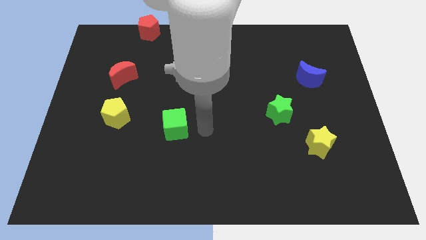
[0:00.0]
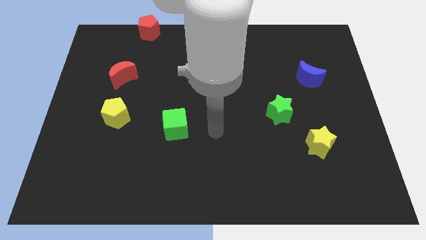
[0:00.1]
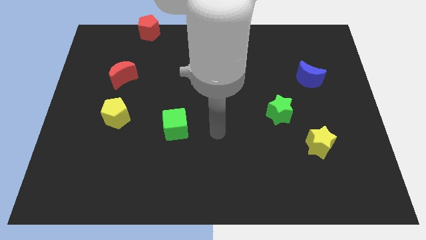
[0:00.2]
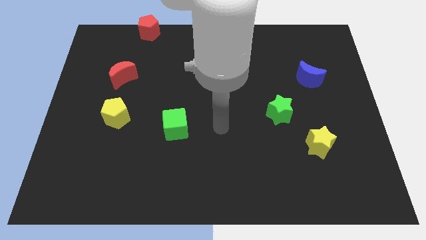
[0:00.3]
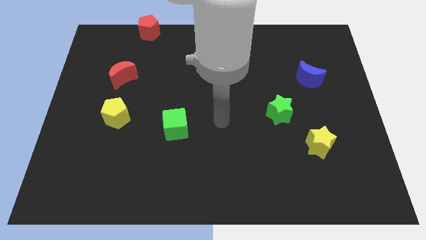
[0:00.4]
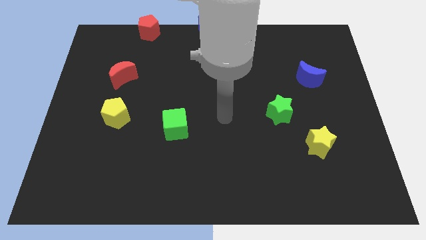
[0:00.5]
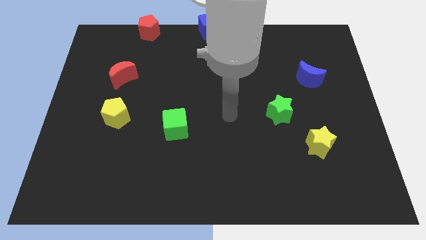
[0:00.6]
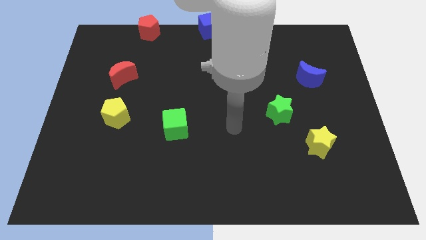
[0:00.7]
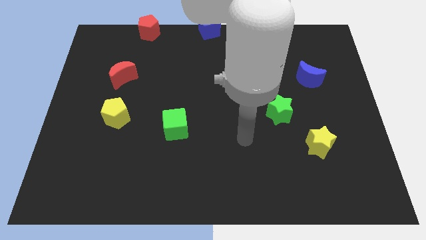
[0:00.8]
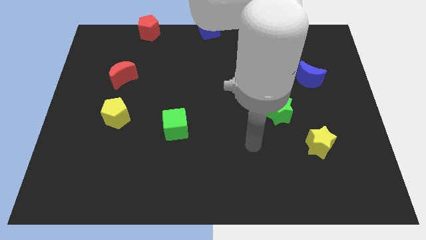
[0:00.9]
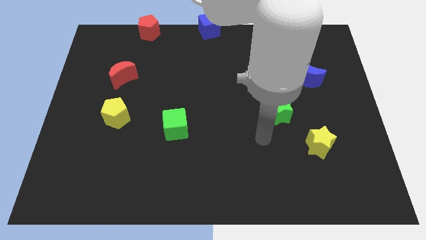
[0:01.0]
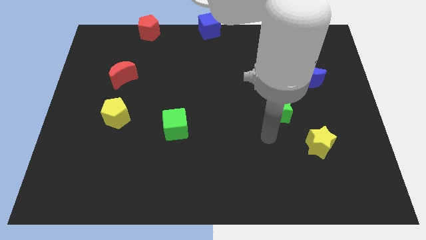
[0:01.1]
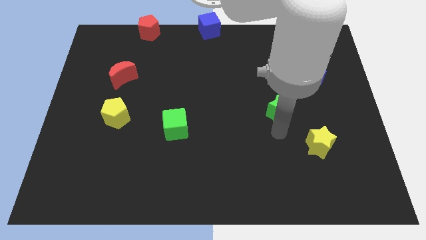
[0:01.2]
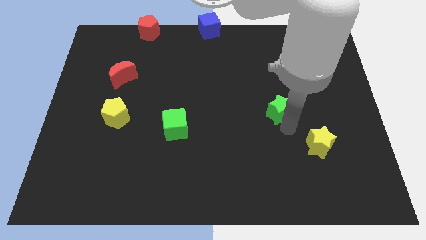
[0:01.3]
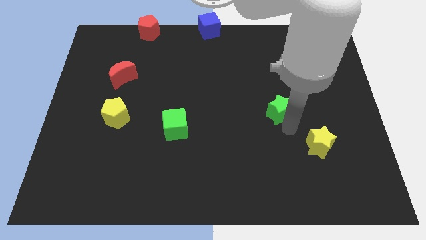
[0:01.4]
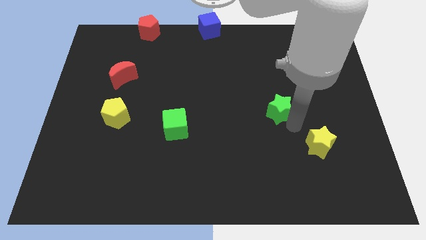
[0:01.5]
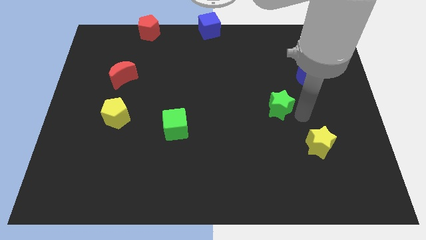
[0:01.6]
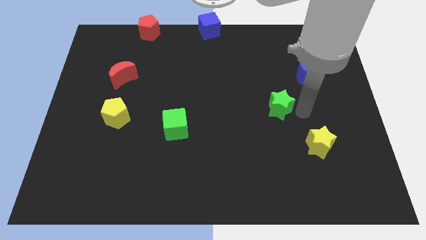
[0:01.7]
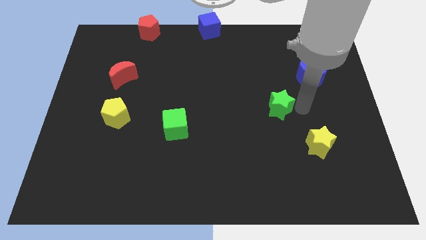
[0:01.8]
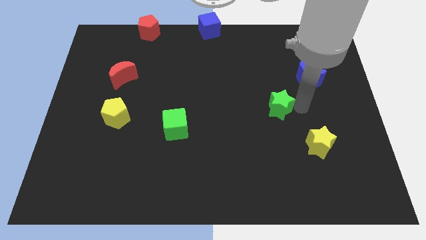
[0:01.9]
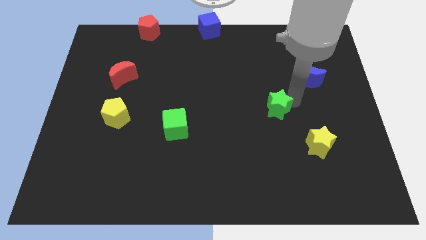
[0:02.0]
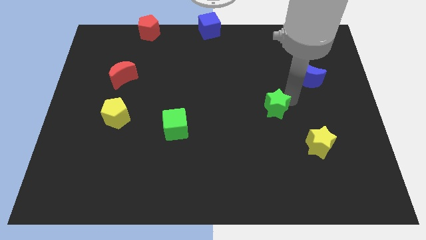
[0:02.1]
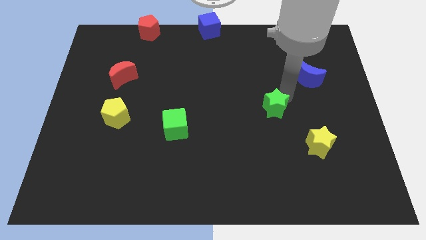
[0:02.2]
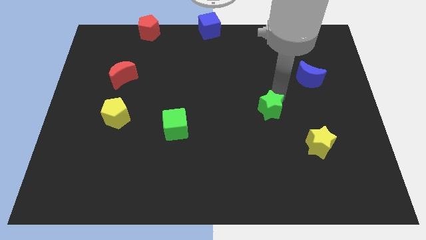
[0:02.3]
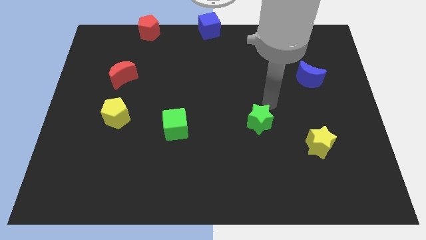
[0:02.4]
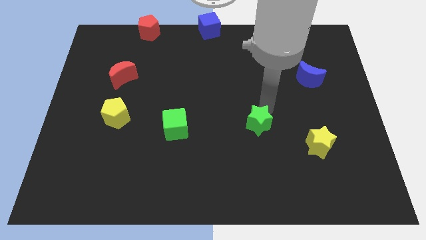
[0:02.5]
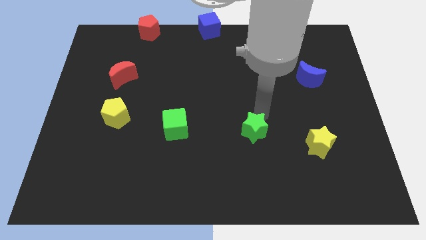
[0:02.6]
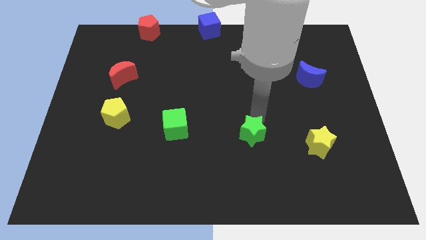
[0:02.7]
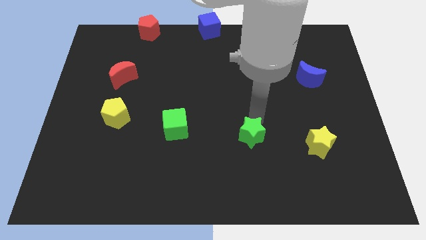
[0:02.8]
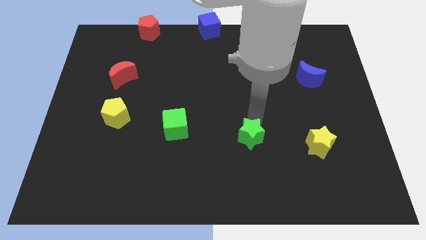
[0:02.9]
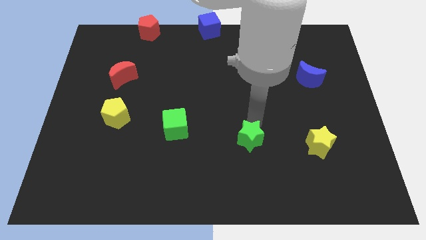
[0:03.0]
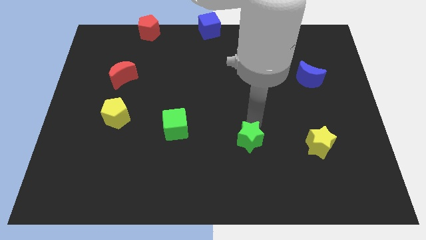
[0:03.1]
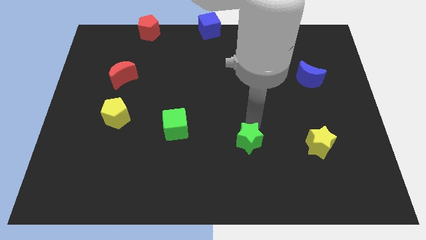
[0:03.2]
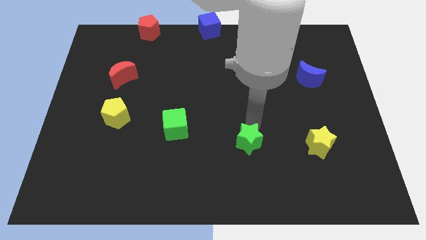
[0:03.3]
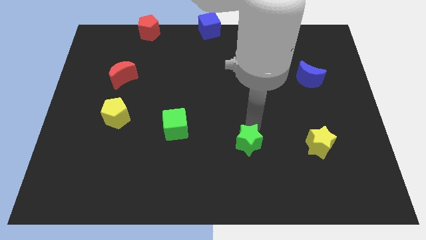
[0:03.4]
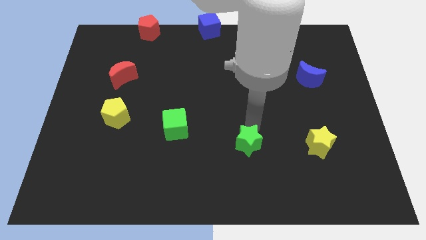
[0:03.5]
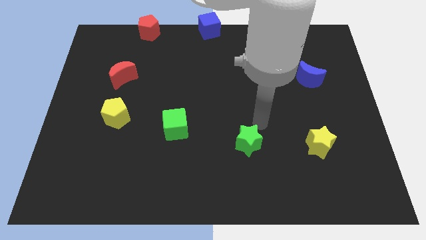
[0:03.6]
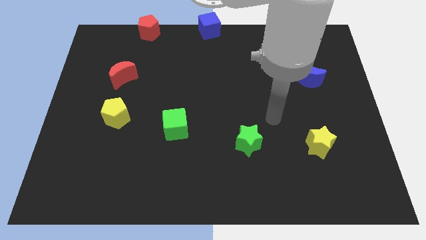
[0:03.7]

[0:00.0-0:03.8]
place the green star to the left of yellow star

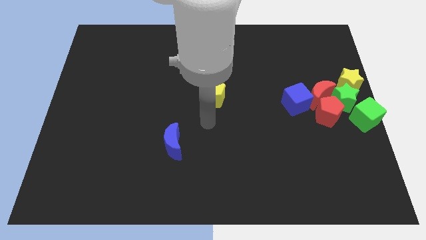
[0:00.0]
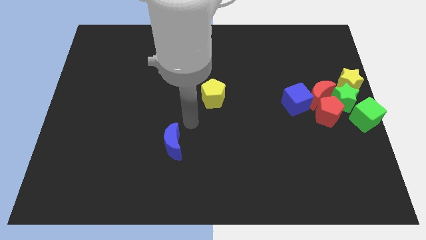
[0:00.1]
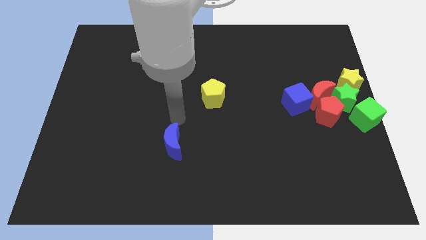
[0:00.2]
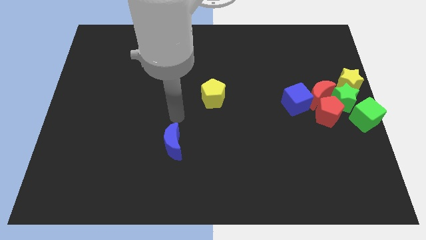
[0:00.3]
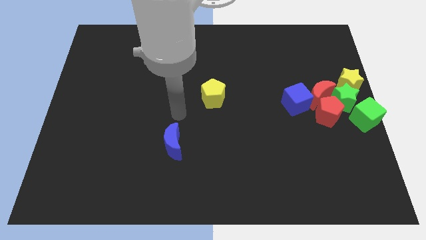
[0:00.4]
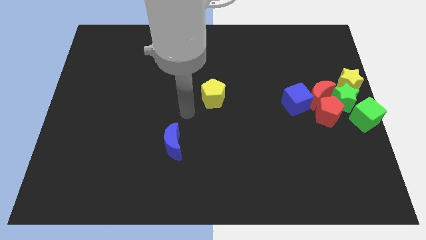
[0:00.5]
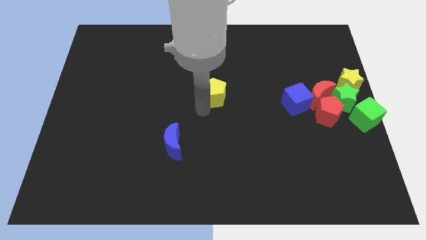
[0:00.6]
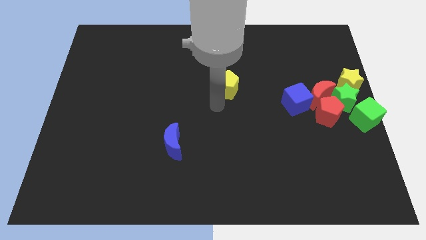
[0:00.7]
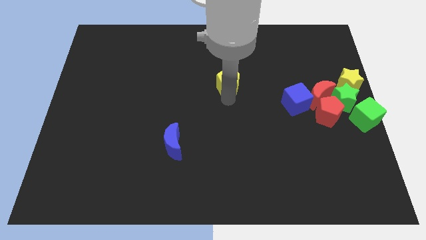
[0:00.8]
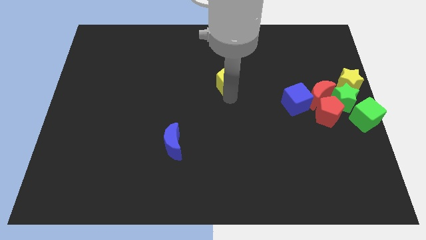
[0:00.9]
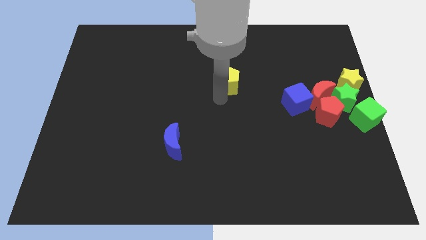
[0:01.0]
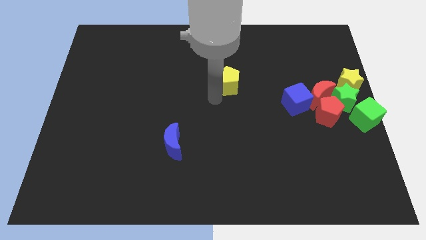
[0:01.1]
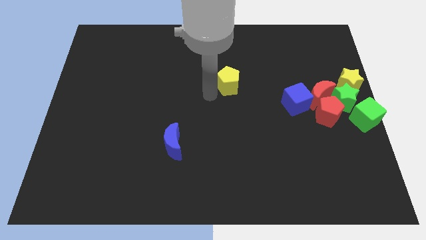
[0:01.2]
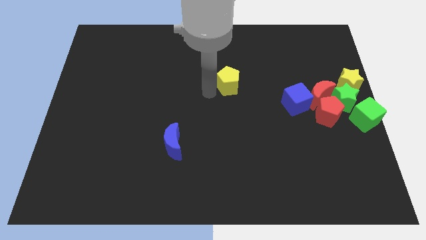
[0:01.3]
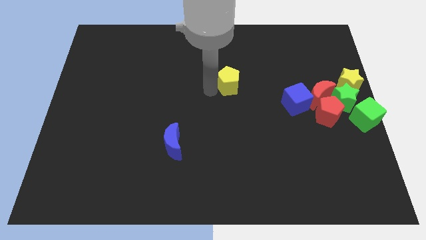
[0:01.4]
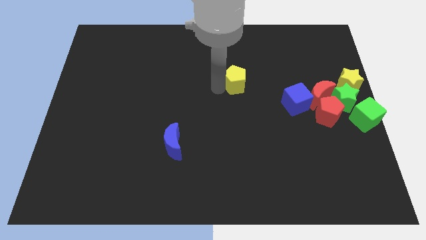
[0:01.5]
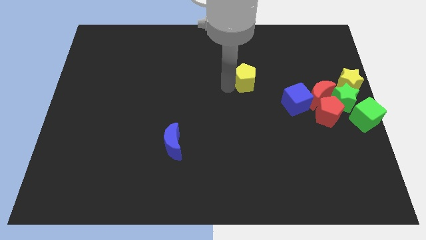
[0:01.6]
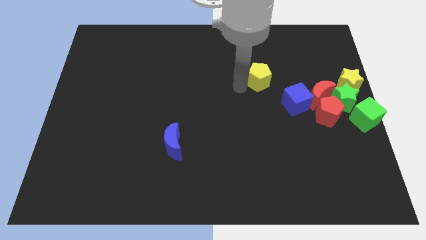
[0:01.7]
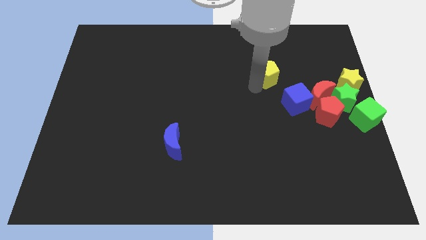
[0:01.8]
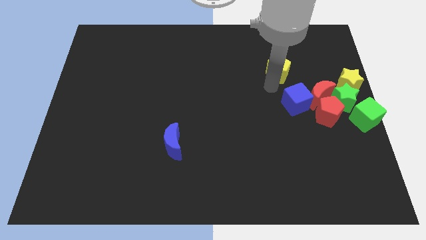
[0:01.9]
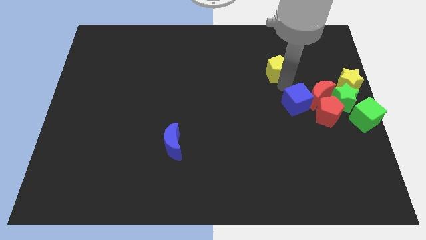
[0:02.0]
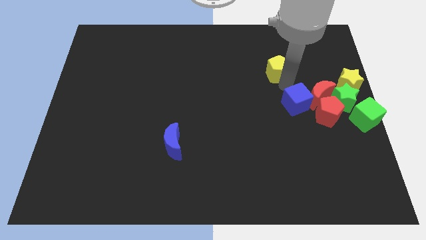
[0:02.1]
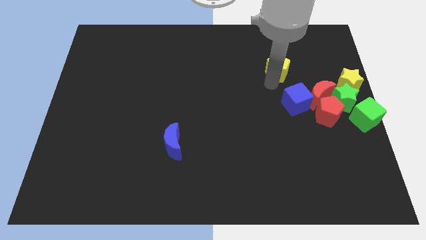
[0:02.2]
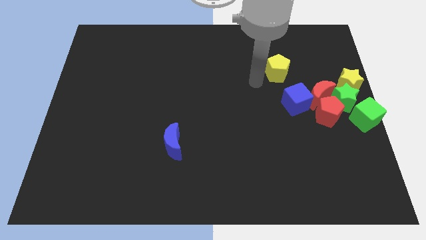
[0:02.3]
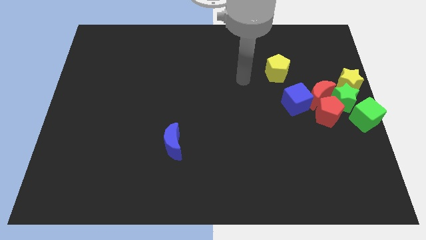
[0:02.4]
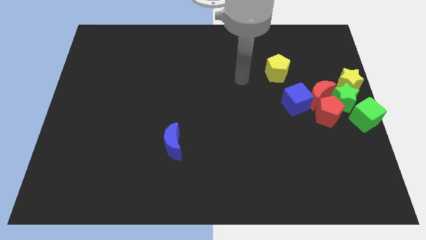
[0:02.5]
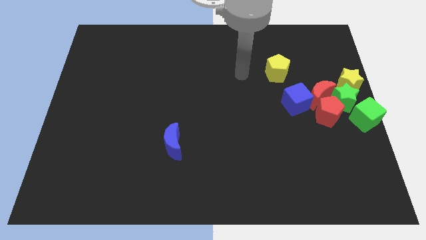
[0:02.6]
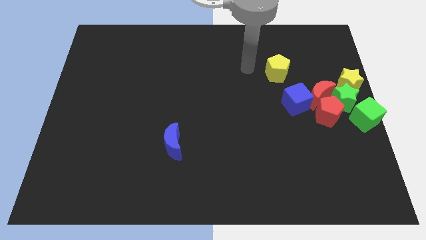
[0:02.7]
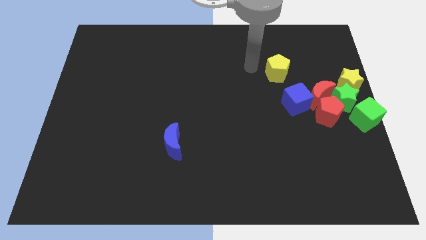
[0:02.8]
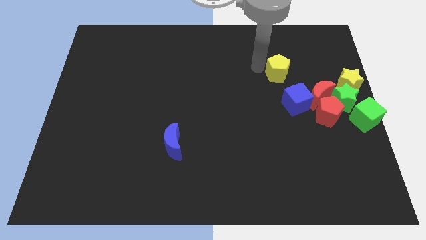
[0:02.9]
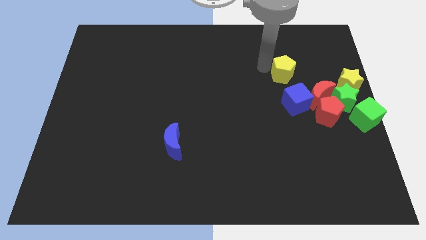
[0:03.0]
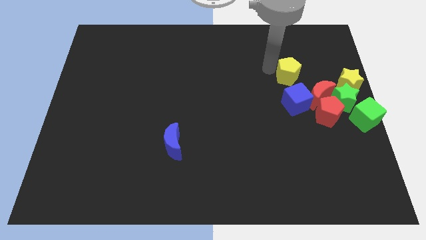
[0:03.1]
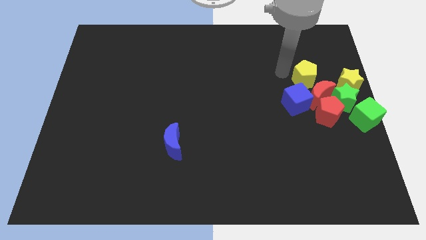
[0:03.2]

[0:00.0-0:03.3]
place the yellow pentagon above the blue cube

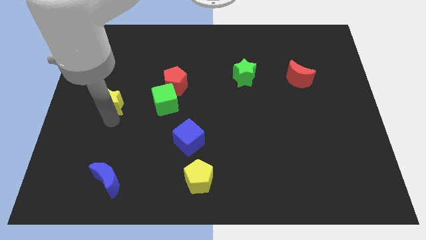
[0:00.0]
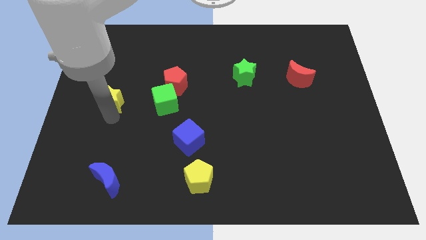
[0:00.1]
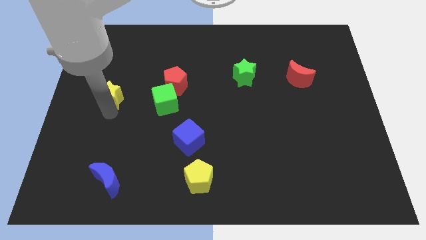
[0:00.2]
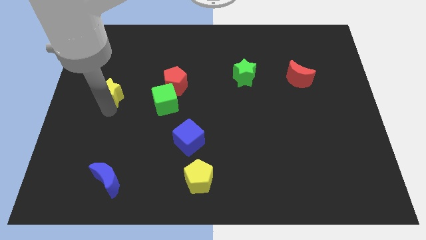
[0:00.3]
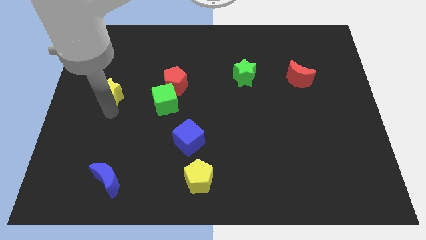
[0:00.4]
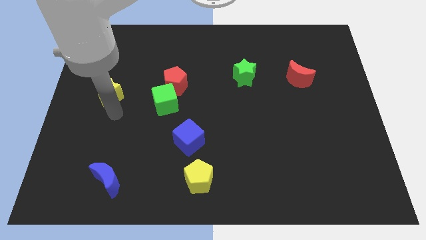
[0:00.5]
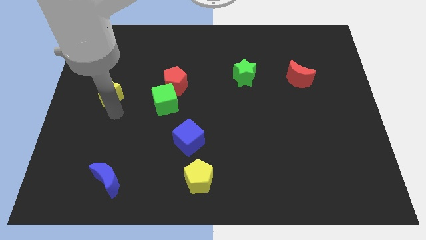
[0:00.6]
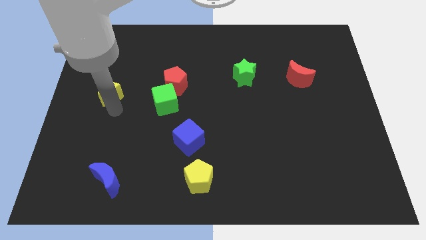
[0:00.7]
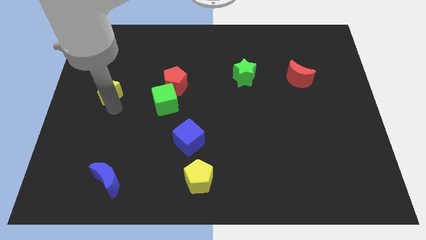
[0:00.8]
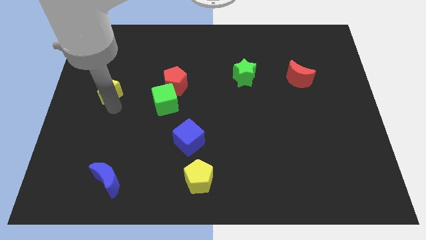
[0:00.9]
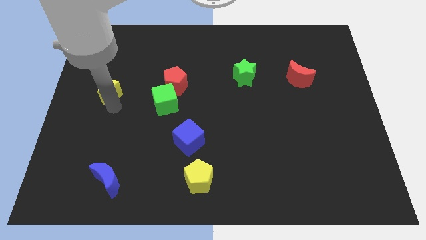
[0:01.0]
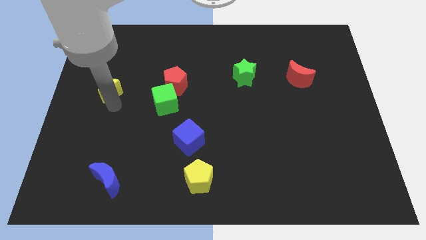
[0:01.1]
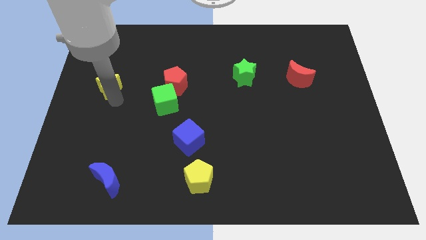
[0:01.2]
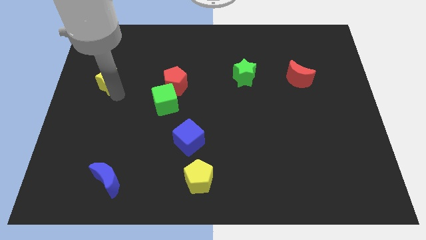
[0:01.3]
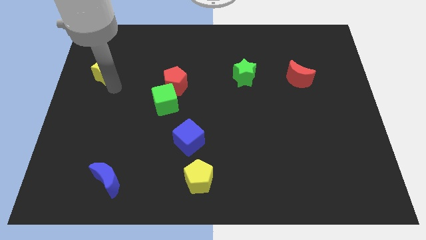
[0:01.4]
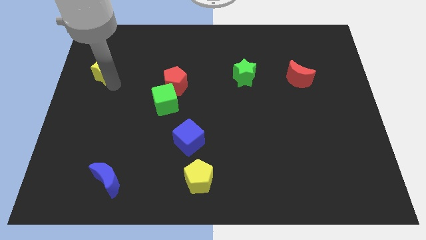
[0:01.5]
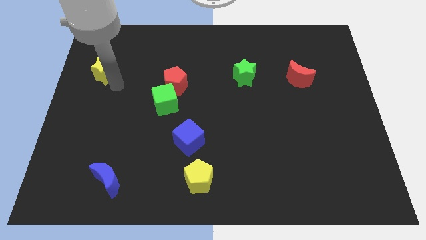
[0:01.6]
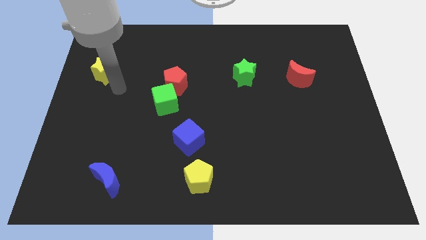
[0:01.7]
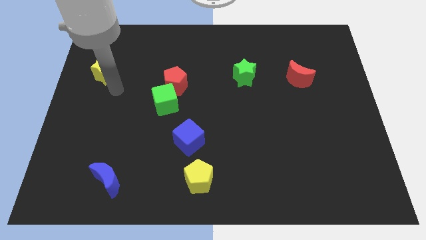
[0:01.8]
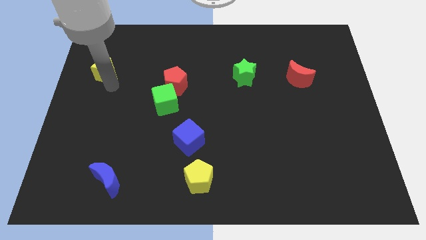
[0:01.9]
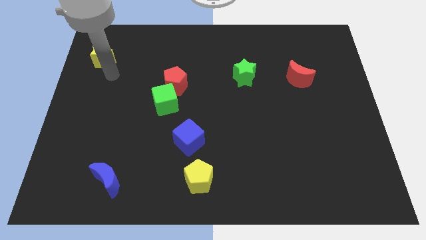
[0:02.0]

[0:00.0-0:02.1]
push yellow star towards up
